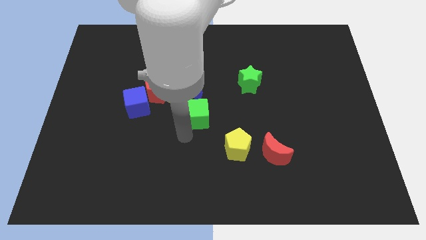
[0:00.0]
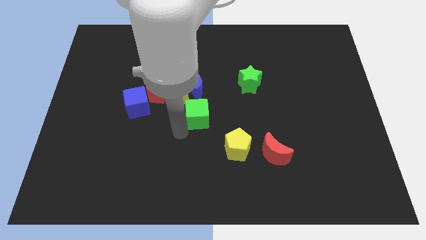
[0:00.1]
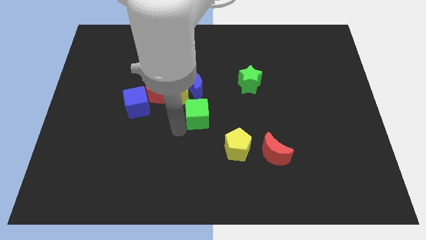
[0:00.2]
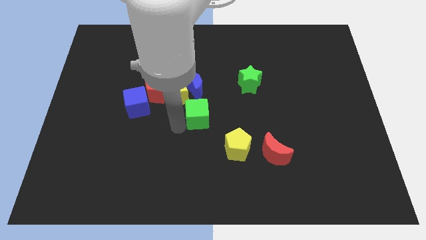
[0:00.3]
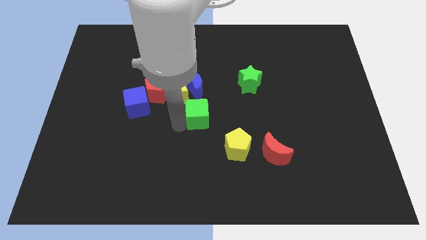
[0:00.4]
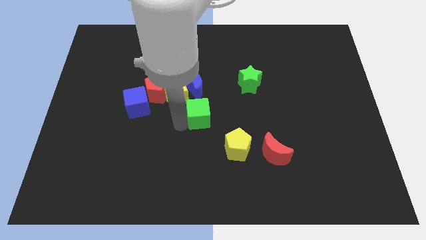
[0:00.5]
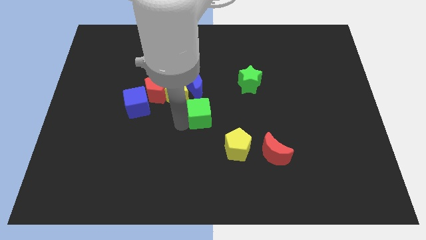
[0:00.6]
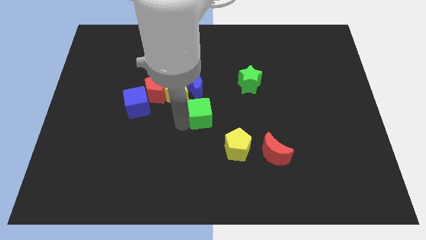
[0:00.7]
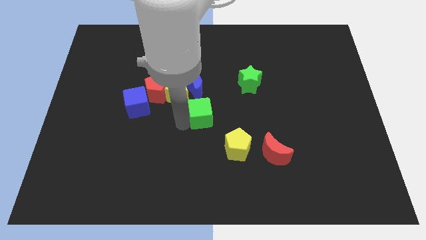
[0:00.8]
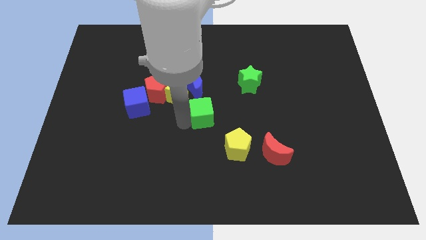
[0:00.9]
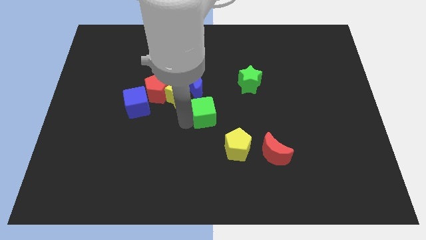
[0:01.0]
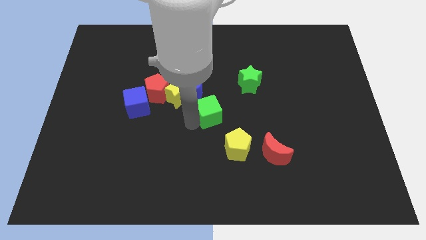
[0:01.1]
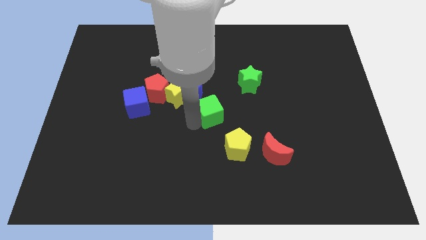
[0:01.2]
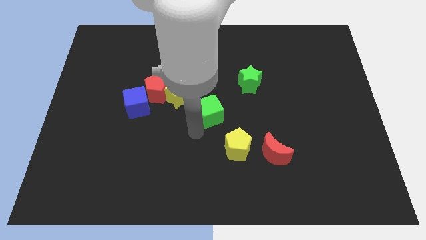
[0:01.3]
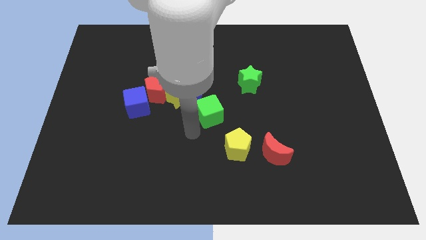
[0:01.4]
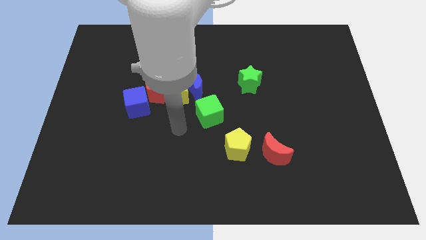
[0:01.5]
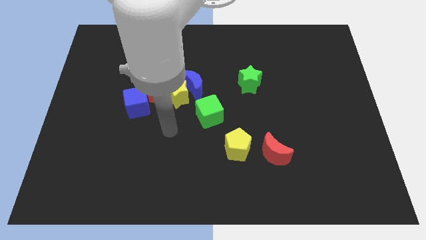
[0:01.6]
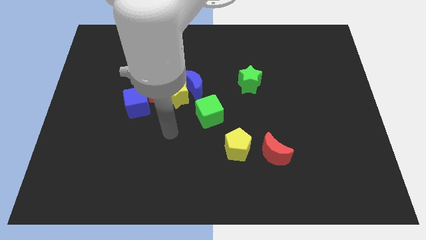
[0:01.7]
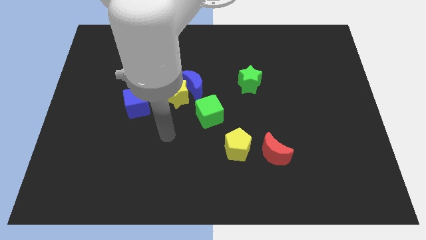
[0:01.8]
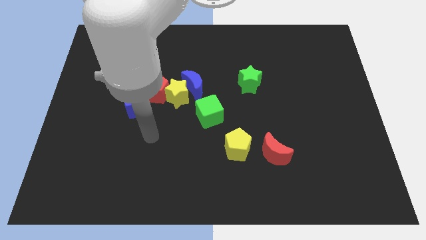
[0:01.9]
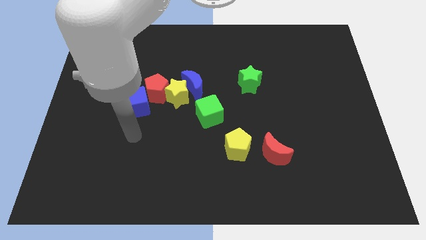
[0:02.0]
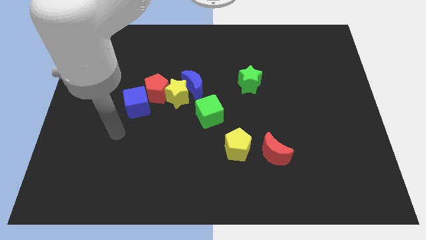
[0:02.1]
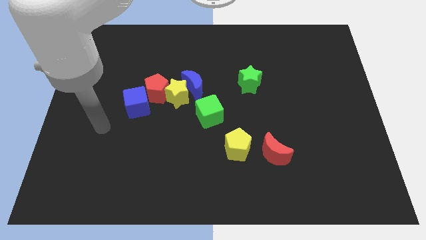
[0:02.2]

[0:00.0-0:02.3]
move the green cube diagonally left of the yellow pentagon

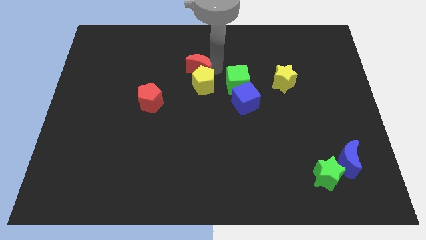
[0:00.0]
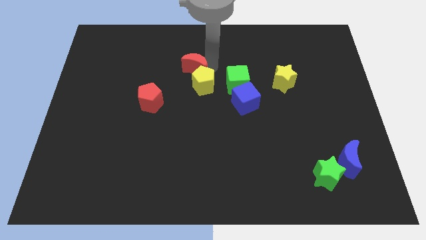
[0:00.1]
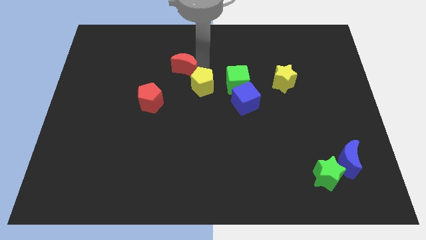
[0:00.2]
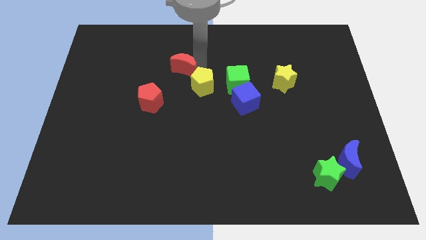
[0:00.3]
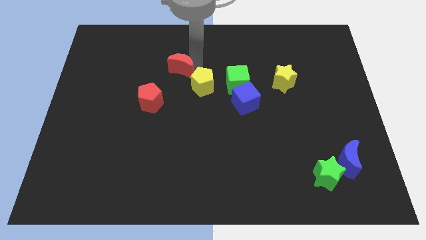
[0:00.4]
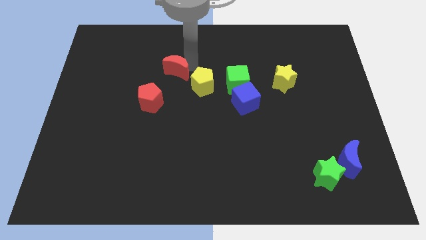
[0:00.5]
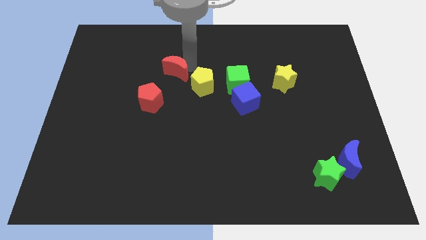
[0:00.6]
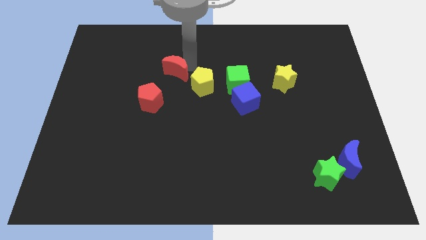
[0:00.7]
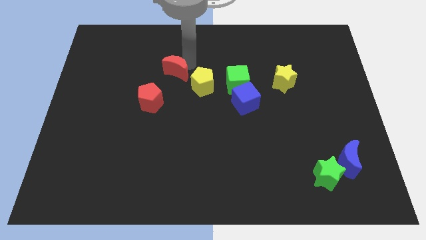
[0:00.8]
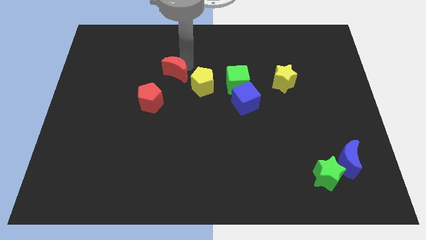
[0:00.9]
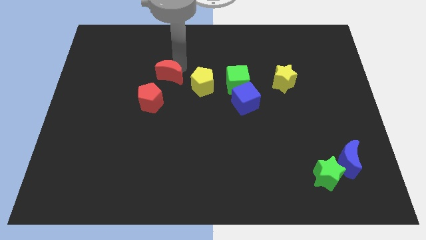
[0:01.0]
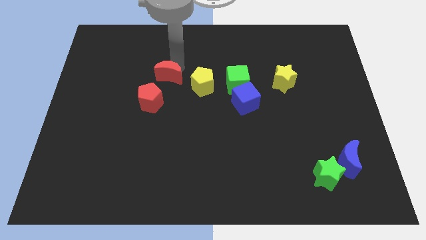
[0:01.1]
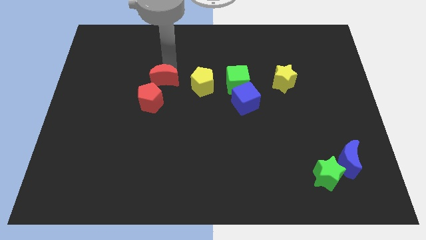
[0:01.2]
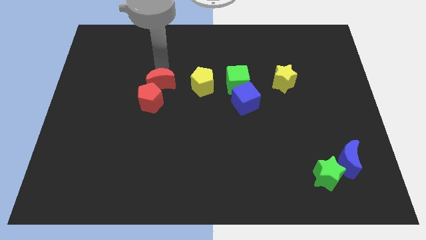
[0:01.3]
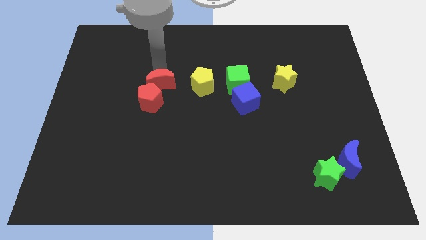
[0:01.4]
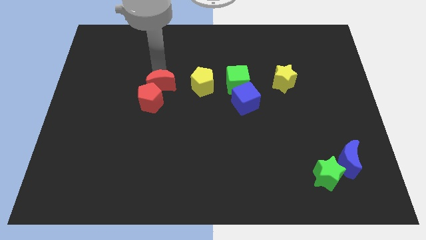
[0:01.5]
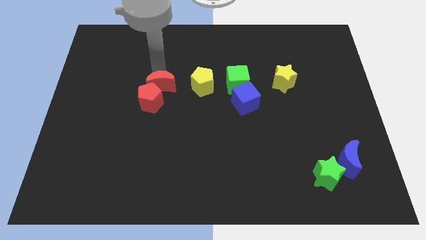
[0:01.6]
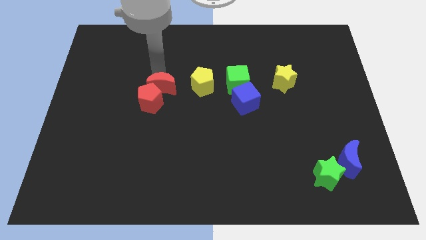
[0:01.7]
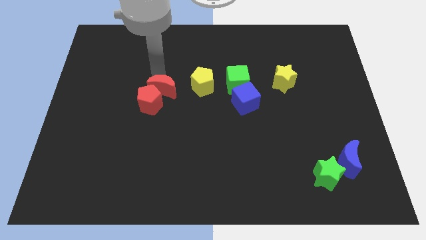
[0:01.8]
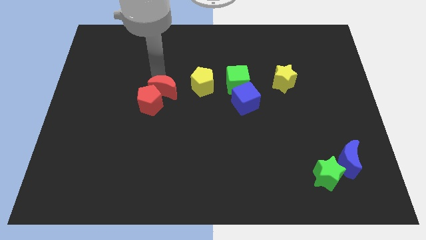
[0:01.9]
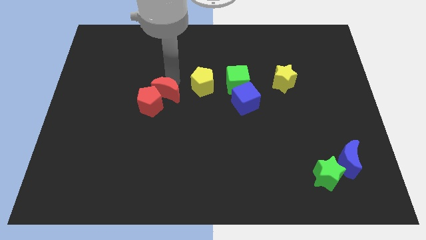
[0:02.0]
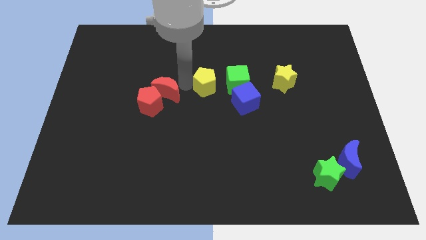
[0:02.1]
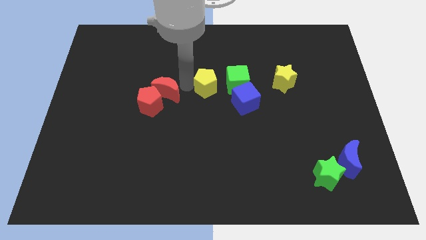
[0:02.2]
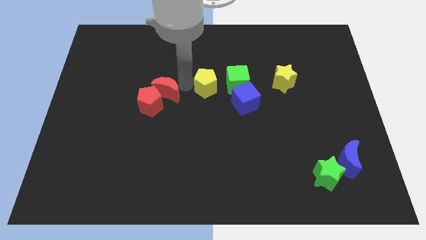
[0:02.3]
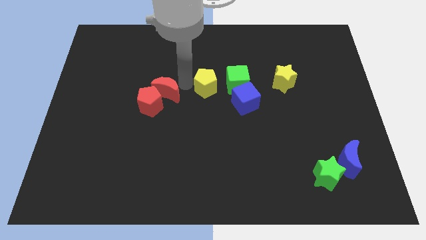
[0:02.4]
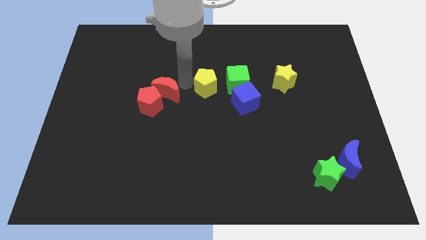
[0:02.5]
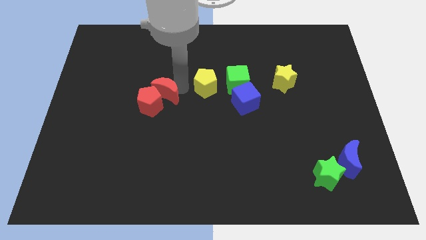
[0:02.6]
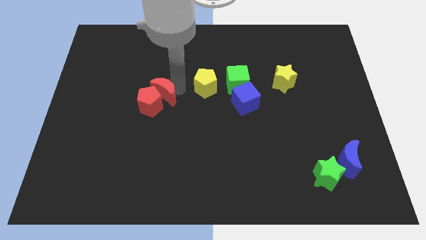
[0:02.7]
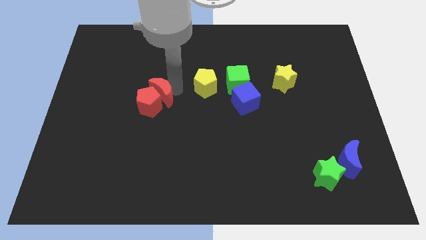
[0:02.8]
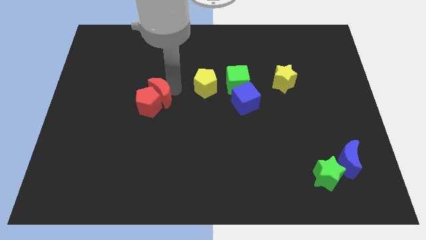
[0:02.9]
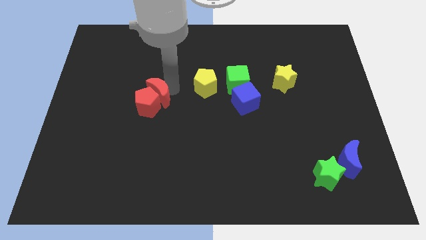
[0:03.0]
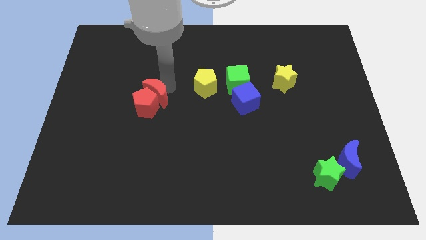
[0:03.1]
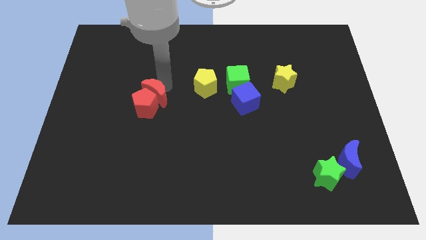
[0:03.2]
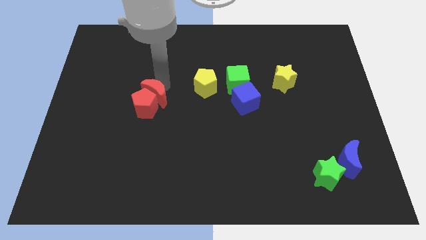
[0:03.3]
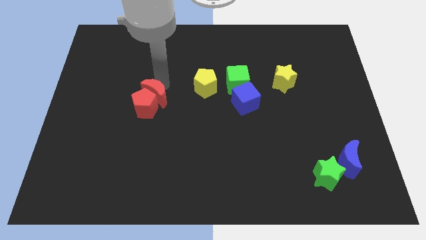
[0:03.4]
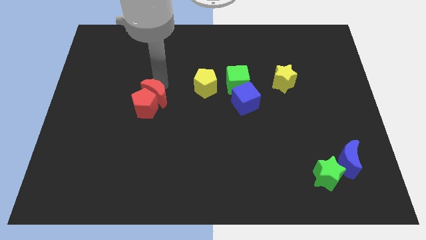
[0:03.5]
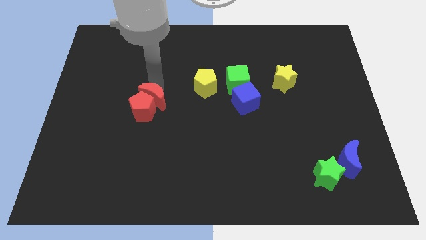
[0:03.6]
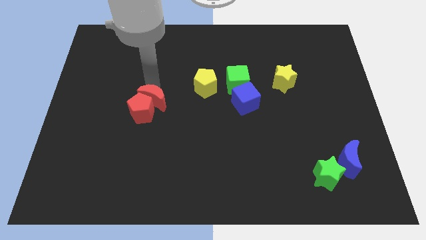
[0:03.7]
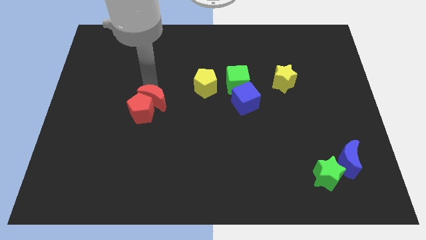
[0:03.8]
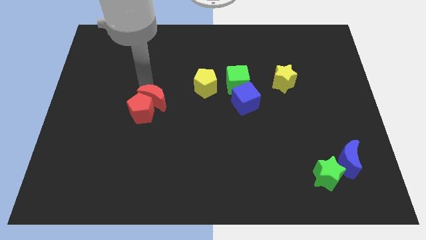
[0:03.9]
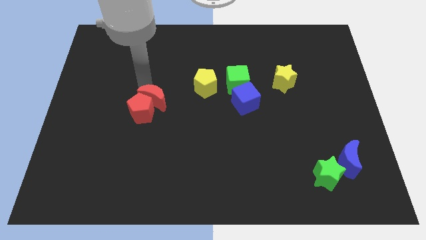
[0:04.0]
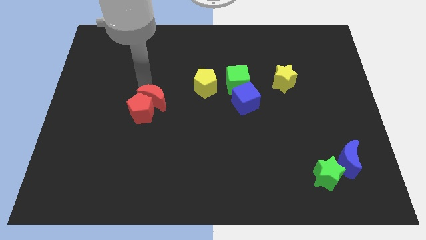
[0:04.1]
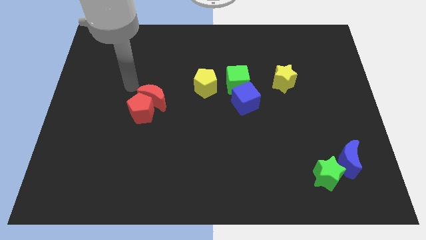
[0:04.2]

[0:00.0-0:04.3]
push red crescent along with red pentagon towards the down

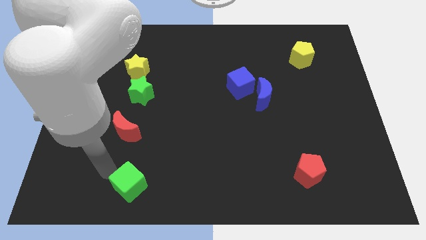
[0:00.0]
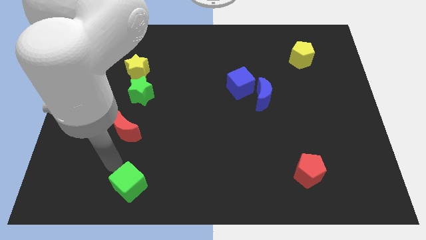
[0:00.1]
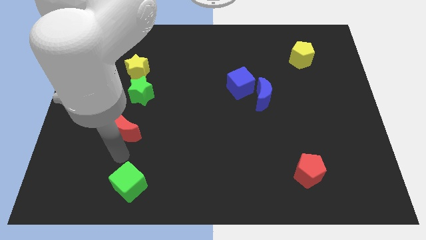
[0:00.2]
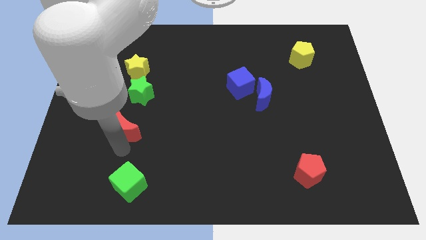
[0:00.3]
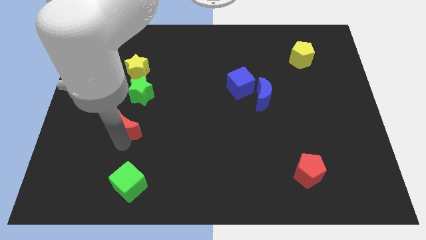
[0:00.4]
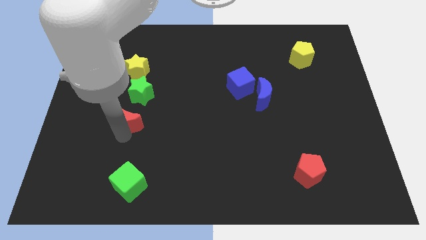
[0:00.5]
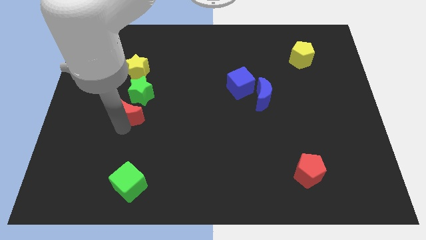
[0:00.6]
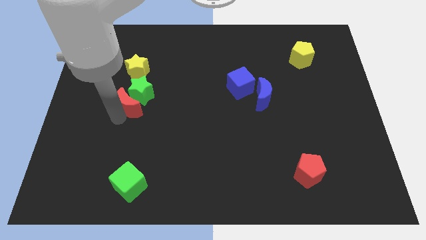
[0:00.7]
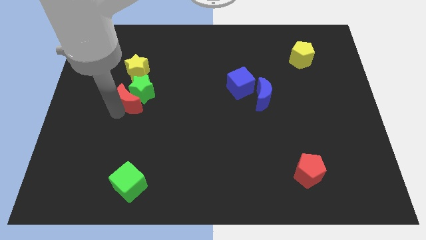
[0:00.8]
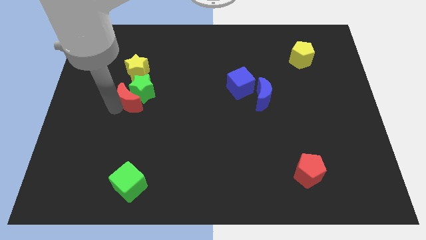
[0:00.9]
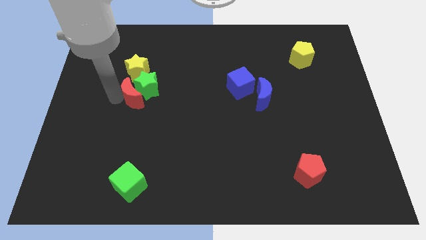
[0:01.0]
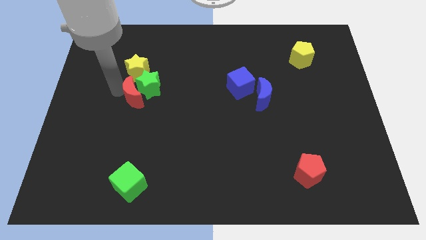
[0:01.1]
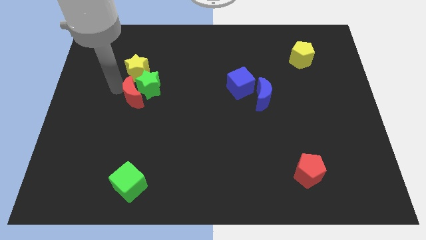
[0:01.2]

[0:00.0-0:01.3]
push red crescent into green star

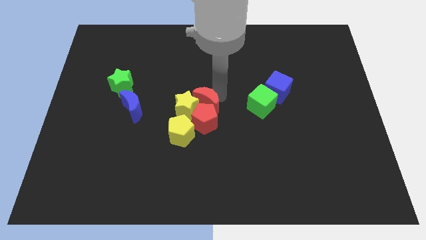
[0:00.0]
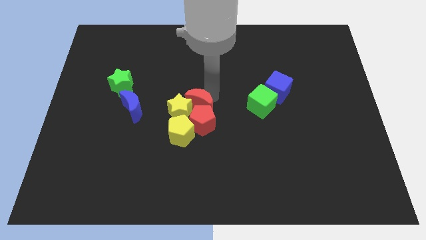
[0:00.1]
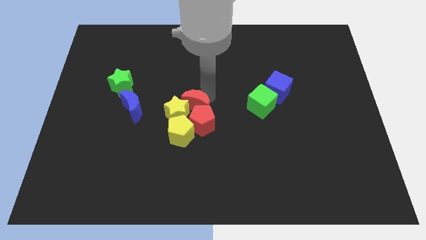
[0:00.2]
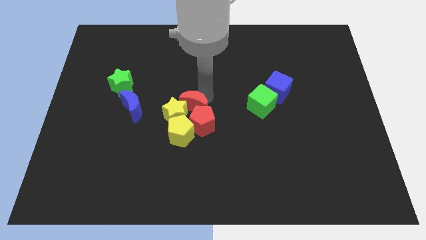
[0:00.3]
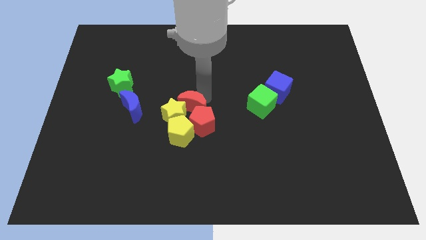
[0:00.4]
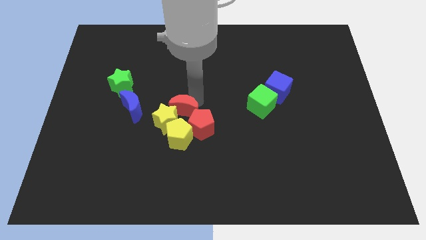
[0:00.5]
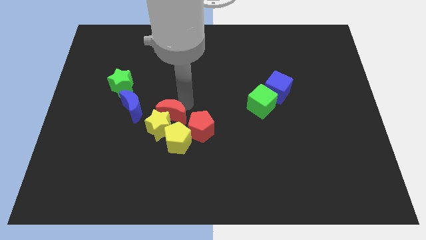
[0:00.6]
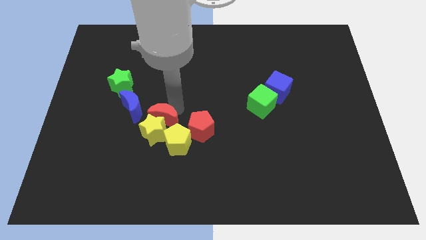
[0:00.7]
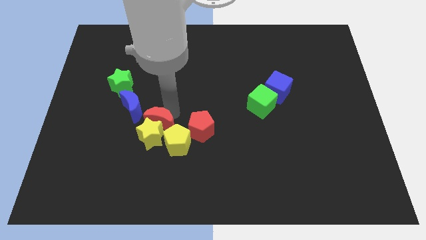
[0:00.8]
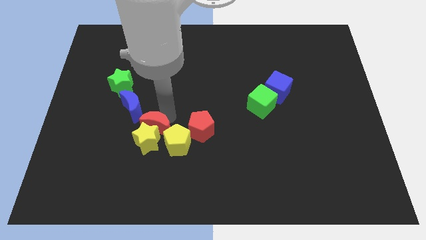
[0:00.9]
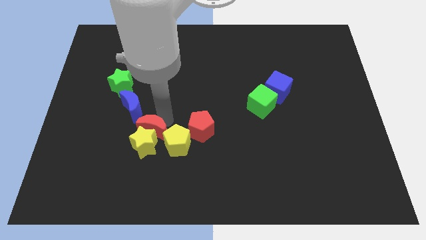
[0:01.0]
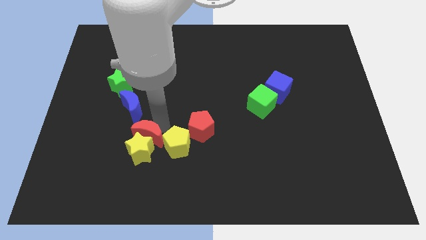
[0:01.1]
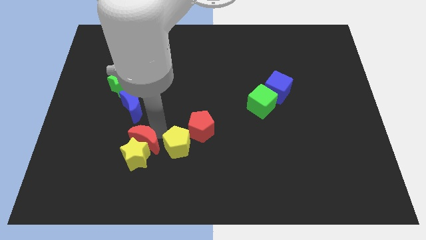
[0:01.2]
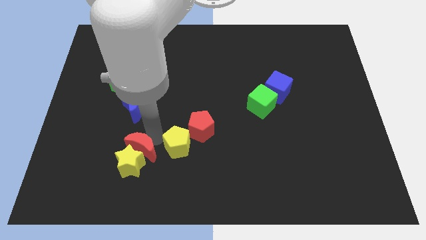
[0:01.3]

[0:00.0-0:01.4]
push the yellow star with the red moon

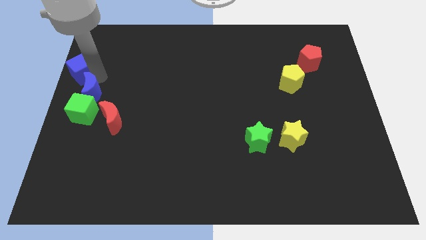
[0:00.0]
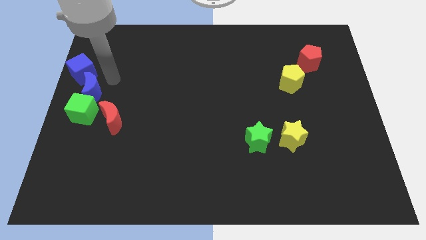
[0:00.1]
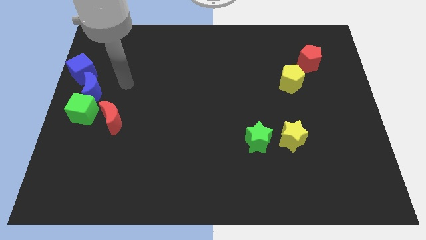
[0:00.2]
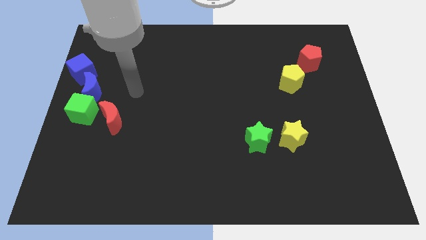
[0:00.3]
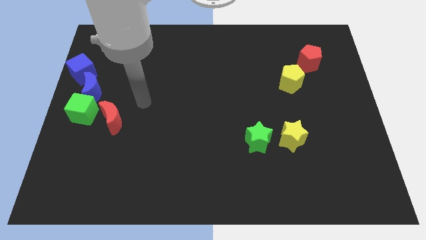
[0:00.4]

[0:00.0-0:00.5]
move the arm away from the blue cube
